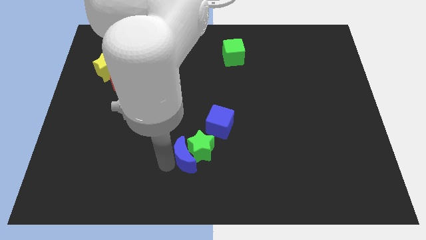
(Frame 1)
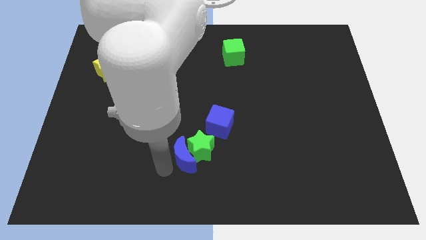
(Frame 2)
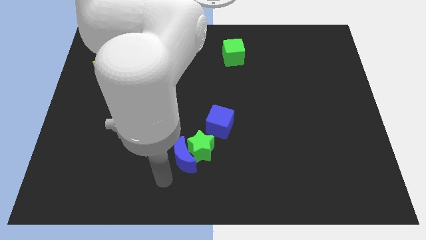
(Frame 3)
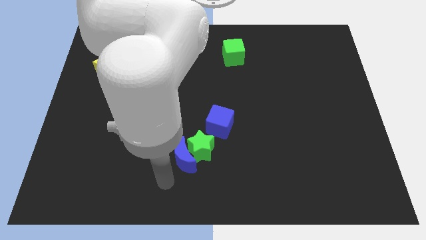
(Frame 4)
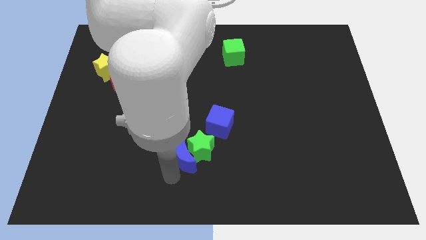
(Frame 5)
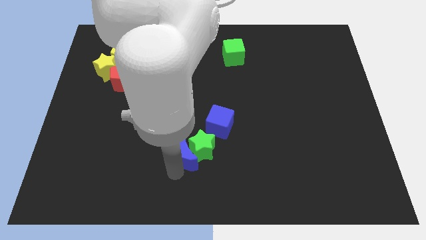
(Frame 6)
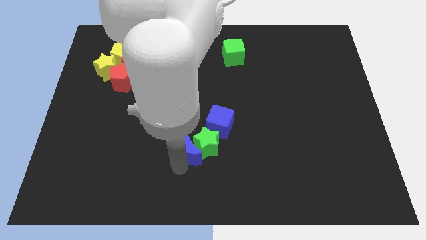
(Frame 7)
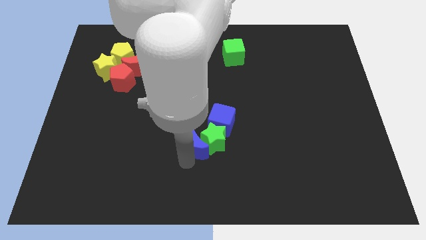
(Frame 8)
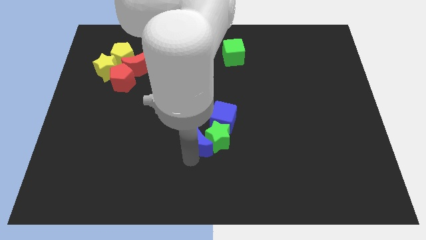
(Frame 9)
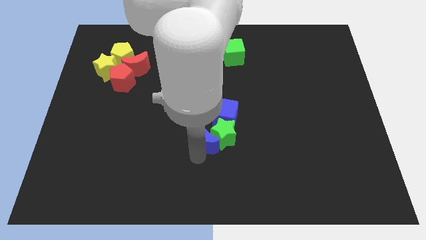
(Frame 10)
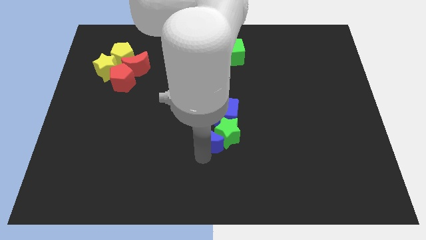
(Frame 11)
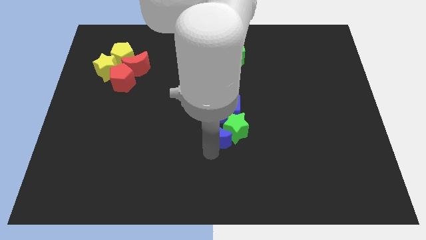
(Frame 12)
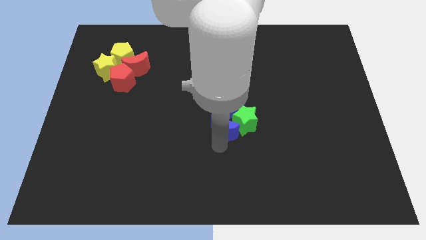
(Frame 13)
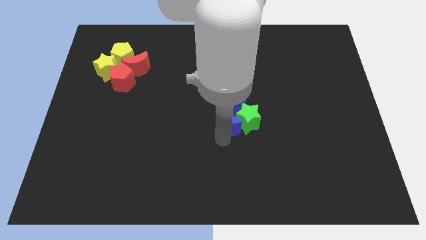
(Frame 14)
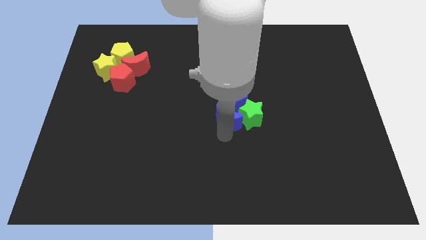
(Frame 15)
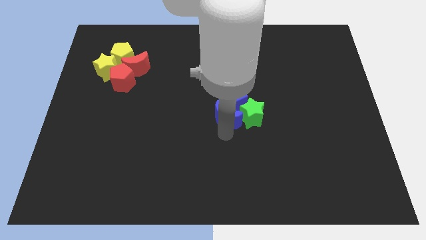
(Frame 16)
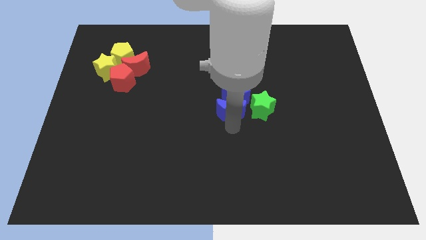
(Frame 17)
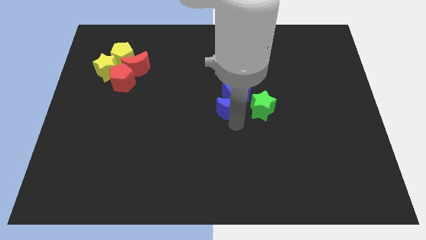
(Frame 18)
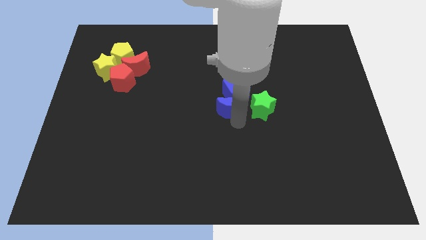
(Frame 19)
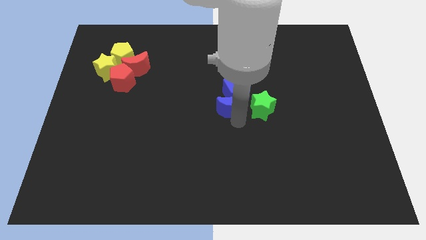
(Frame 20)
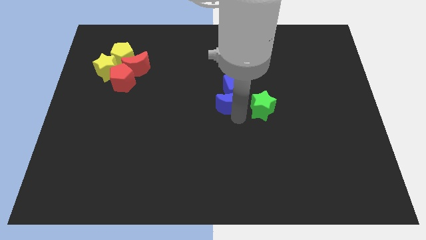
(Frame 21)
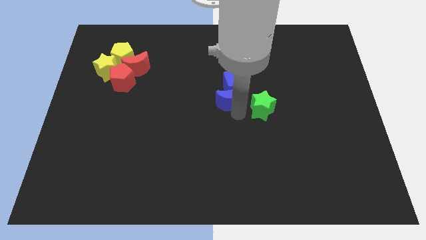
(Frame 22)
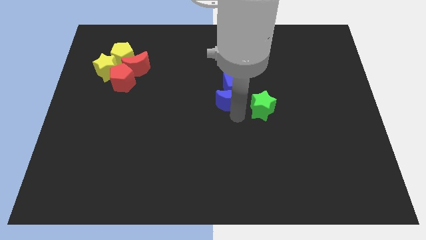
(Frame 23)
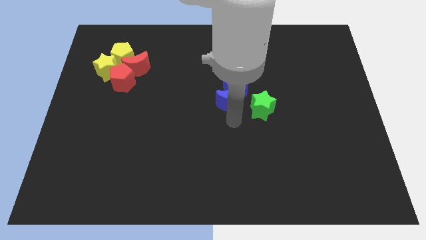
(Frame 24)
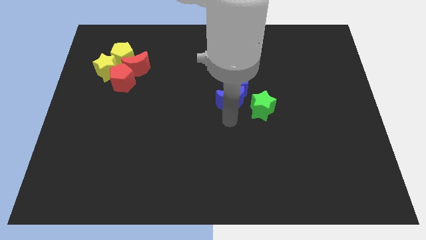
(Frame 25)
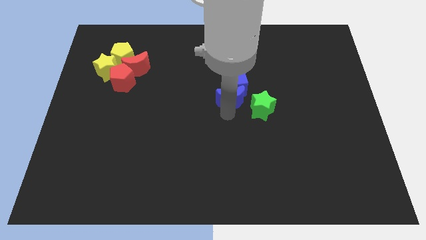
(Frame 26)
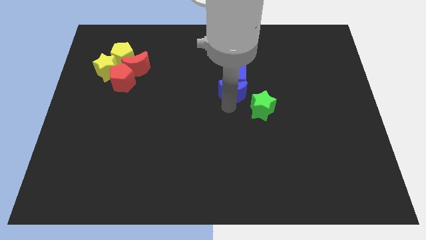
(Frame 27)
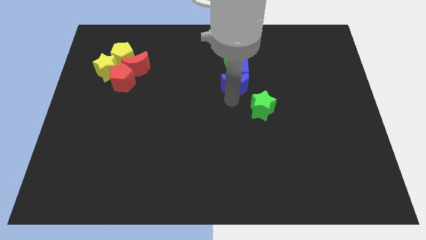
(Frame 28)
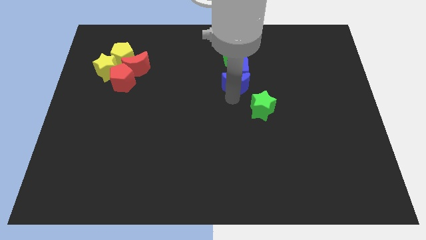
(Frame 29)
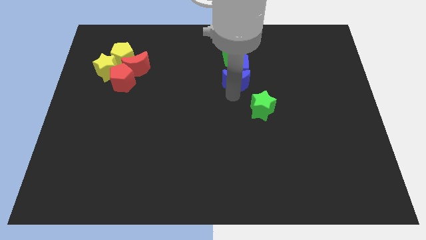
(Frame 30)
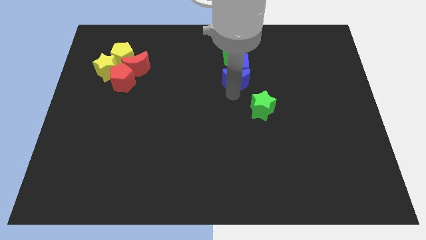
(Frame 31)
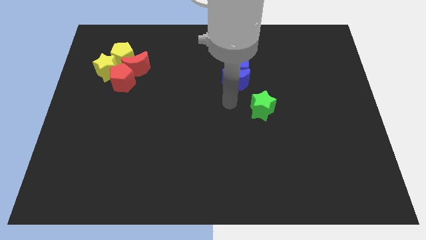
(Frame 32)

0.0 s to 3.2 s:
move the blue blocks close to the green cube

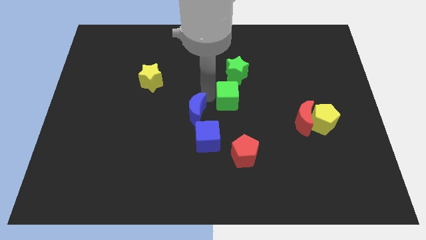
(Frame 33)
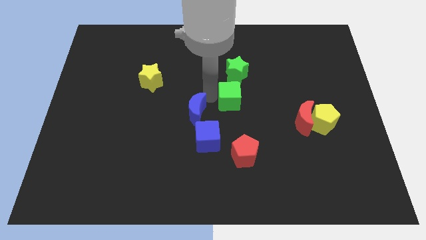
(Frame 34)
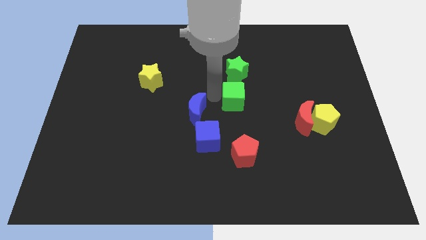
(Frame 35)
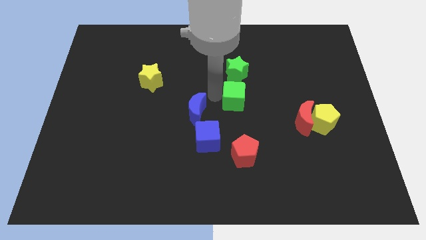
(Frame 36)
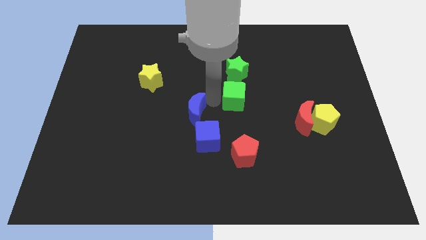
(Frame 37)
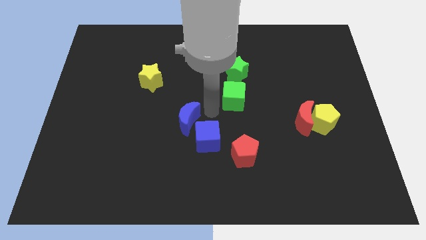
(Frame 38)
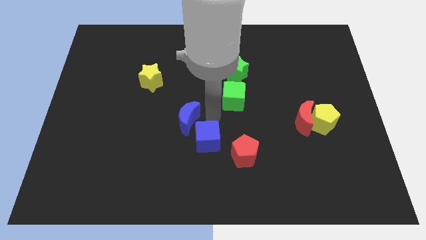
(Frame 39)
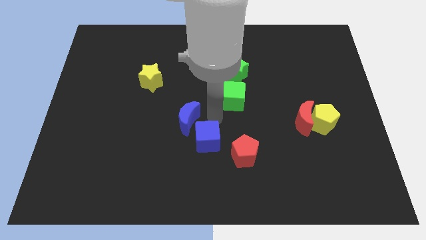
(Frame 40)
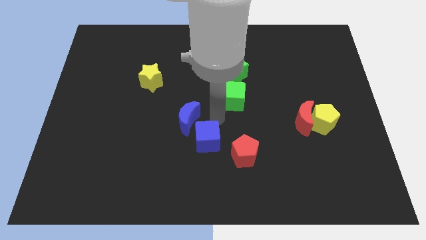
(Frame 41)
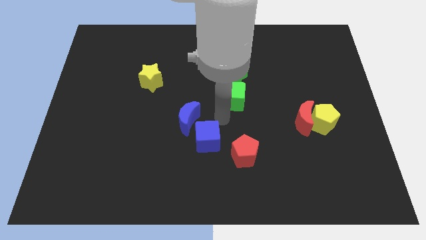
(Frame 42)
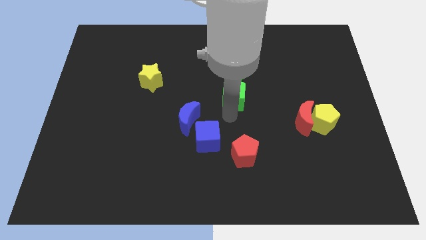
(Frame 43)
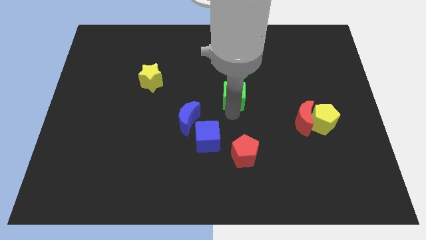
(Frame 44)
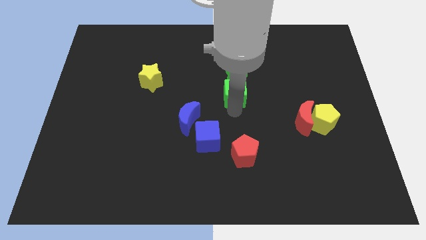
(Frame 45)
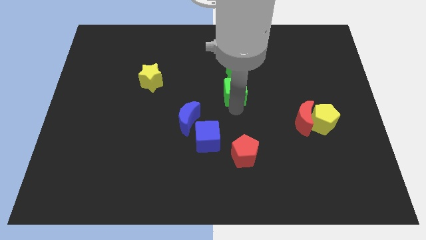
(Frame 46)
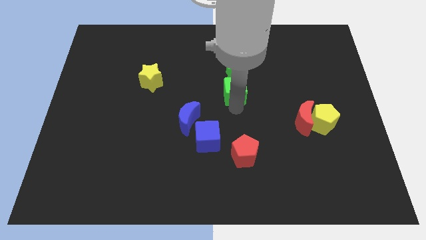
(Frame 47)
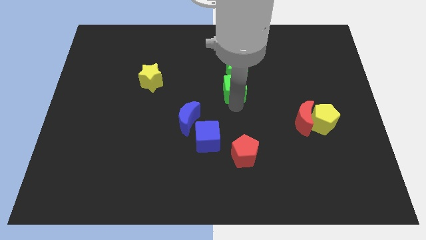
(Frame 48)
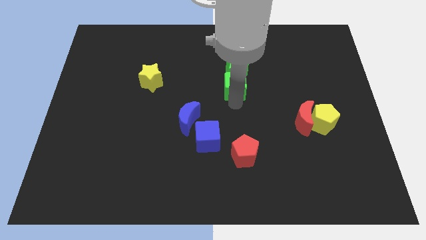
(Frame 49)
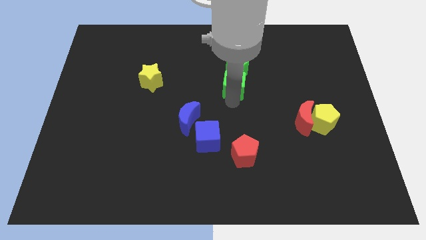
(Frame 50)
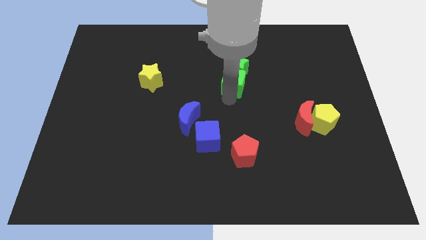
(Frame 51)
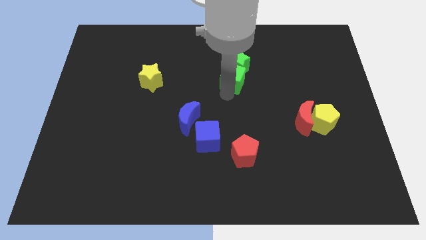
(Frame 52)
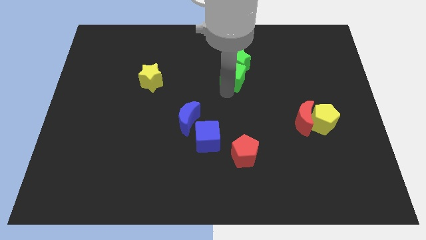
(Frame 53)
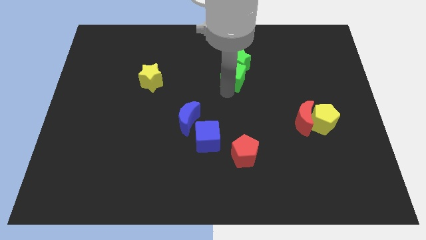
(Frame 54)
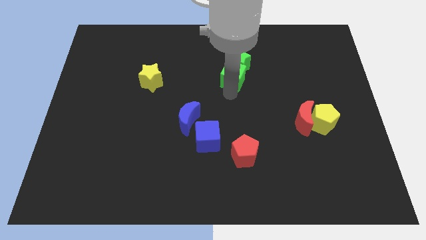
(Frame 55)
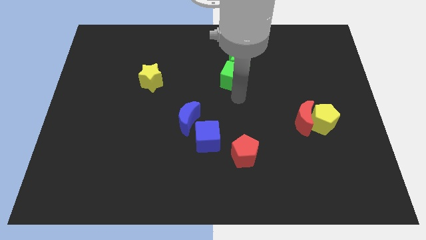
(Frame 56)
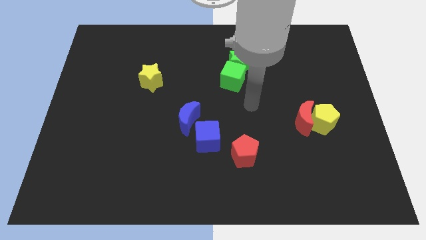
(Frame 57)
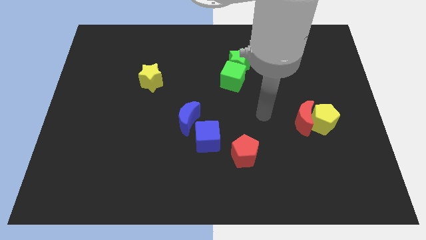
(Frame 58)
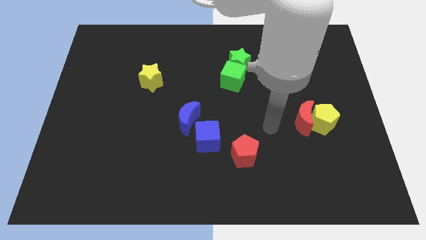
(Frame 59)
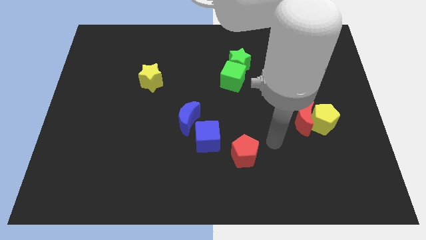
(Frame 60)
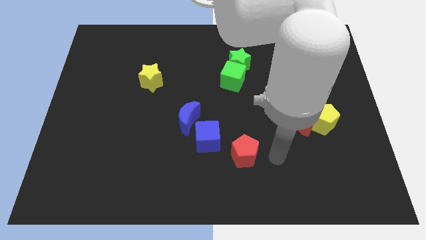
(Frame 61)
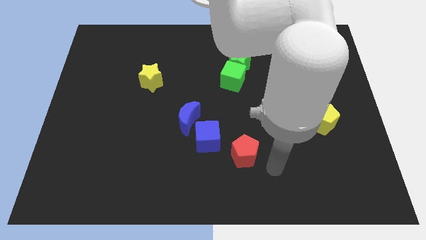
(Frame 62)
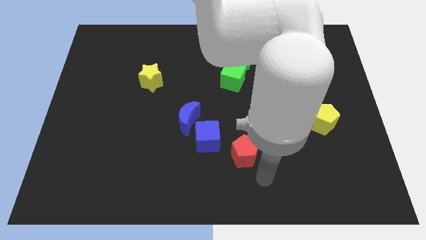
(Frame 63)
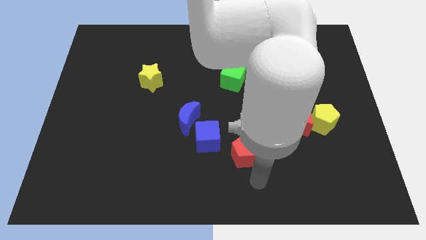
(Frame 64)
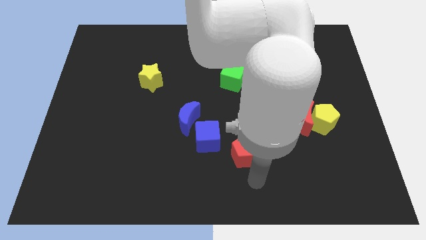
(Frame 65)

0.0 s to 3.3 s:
push the green cube into the green star

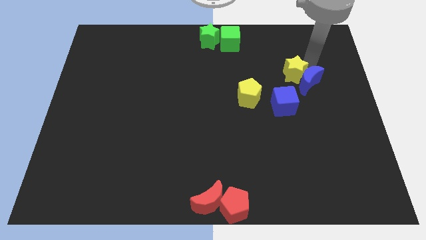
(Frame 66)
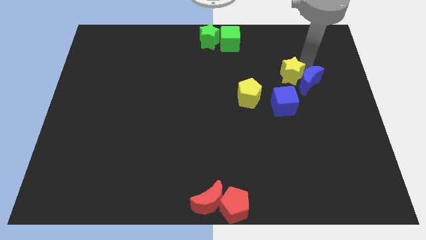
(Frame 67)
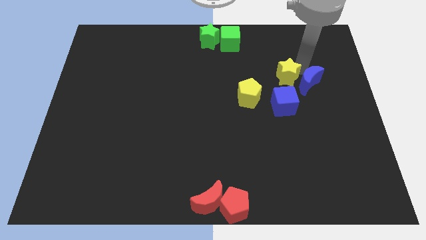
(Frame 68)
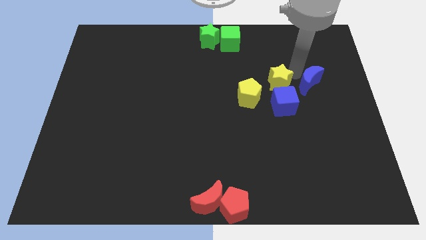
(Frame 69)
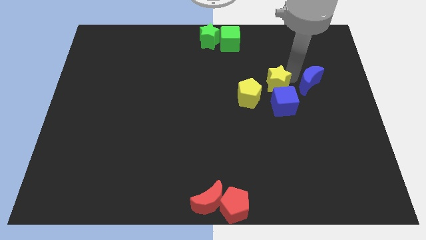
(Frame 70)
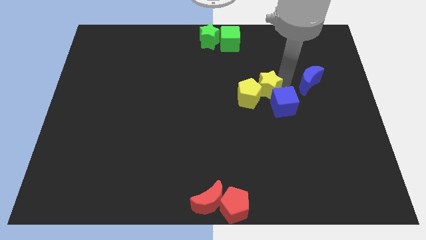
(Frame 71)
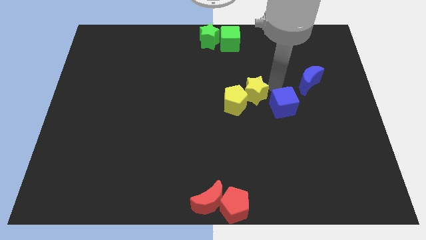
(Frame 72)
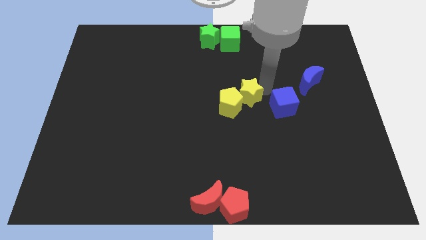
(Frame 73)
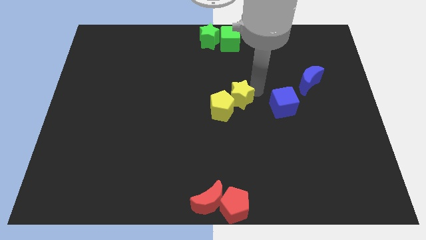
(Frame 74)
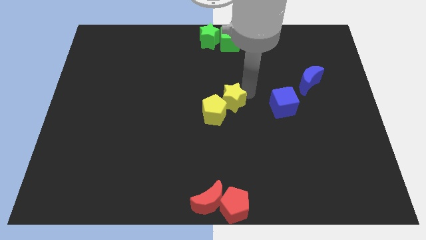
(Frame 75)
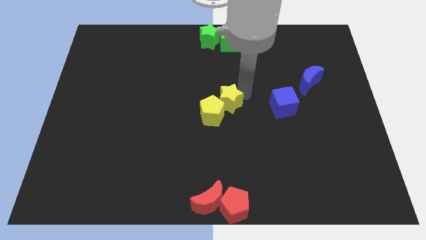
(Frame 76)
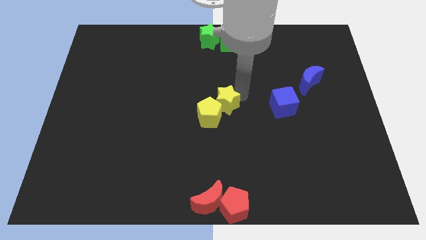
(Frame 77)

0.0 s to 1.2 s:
push the yellow star into the yellow pentagon

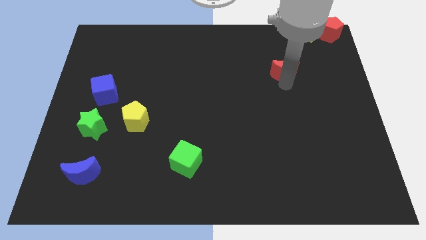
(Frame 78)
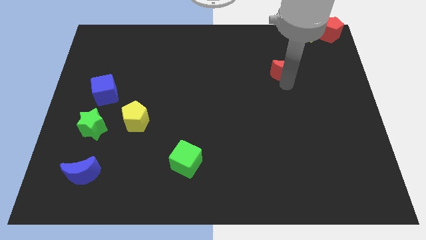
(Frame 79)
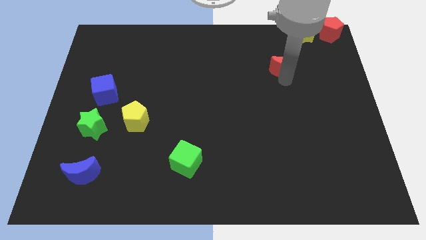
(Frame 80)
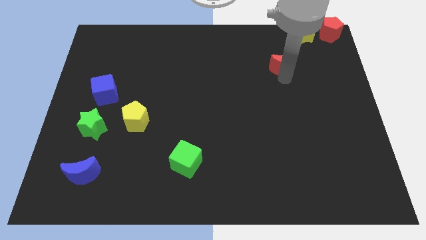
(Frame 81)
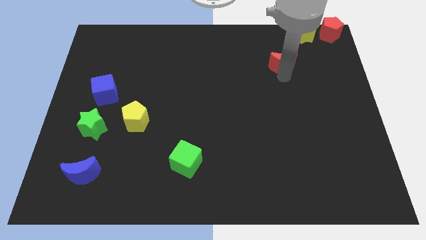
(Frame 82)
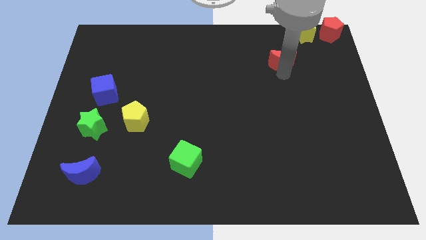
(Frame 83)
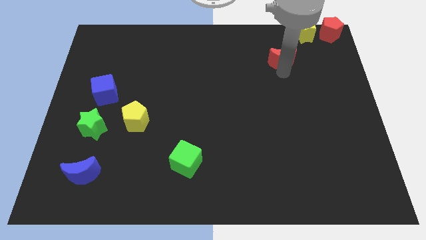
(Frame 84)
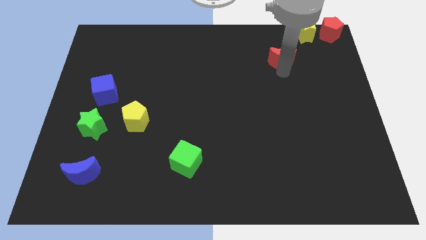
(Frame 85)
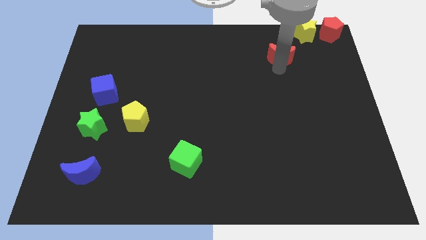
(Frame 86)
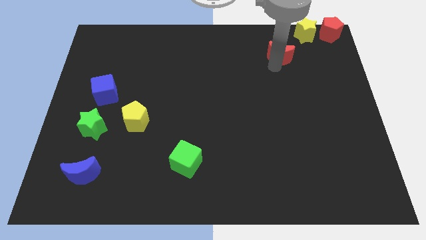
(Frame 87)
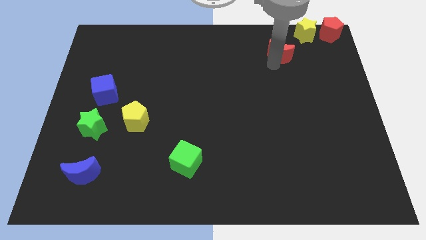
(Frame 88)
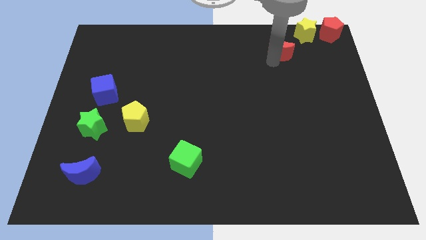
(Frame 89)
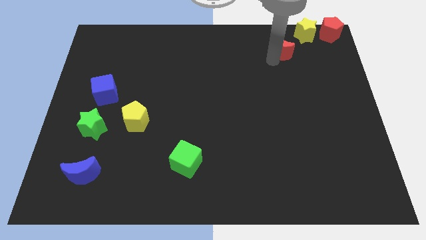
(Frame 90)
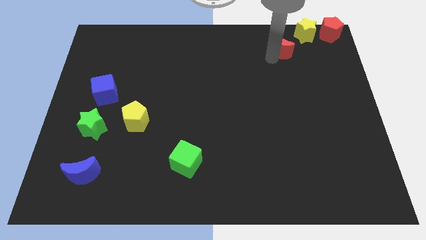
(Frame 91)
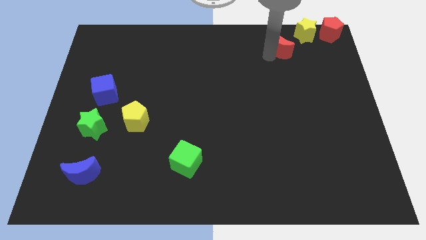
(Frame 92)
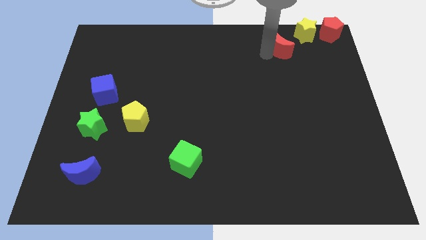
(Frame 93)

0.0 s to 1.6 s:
move the red moon close to the yellow star
